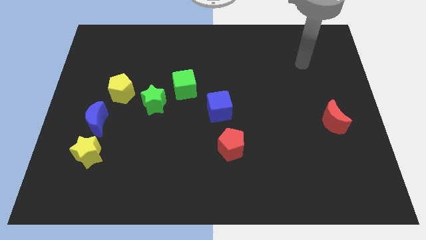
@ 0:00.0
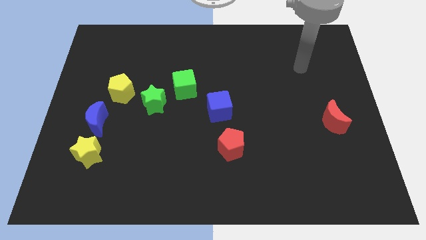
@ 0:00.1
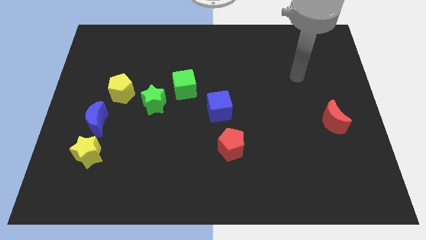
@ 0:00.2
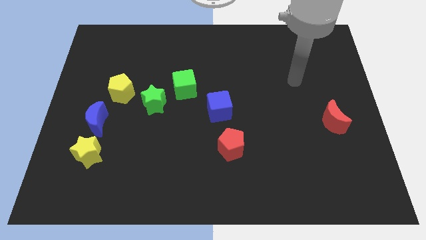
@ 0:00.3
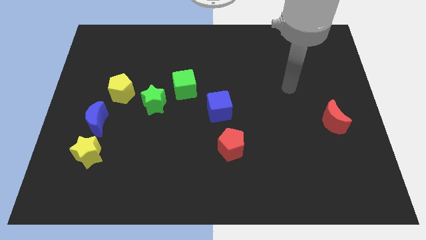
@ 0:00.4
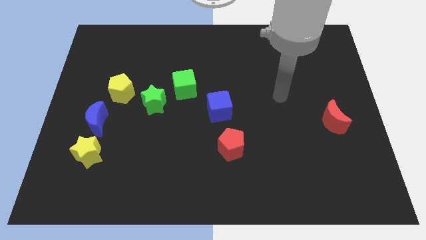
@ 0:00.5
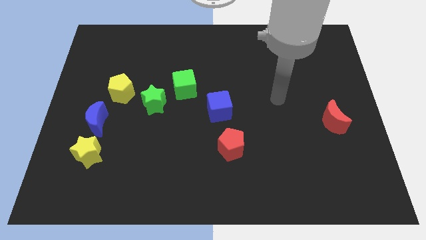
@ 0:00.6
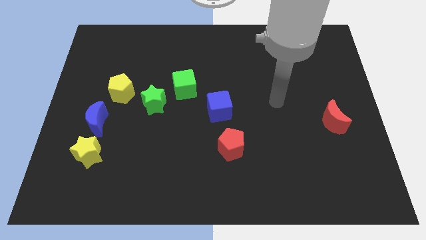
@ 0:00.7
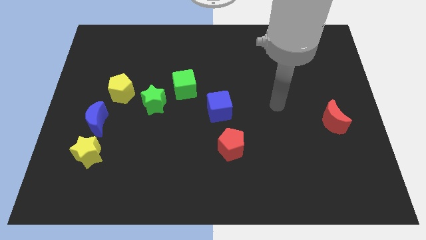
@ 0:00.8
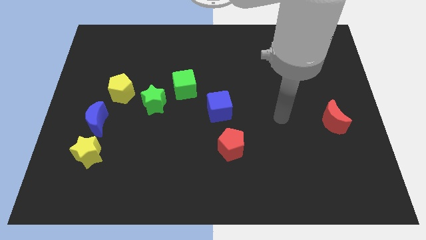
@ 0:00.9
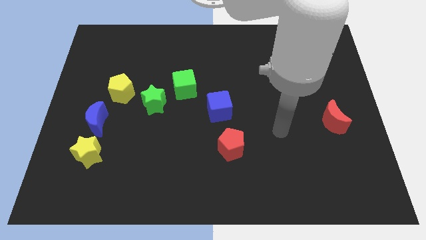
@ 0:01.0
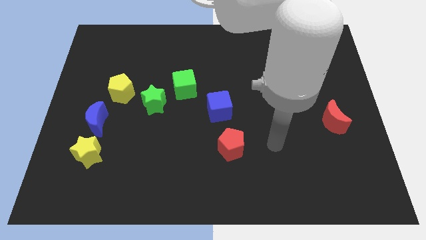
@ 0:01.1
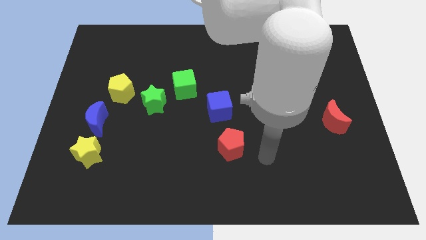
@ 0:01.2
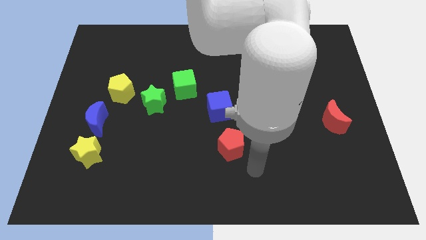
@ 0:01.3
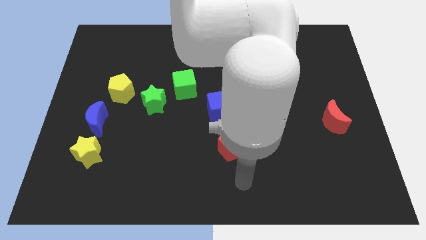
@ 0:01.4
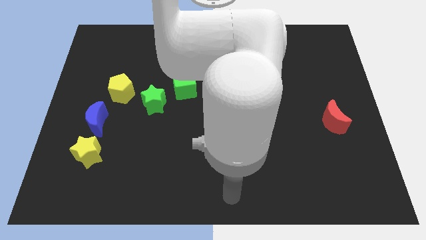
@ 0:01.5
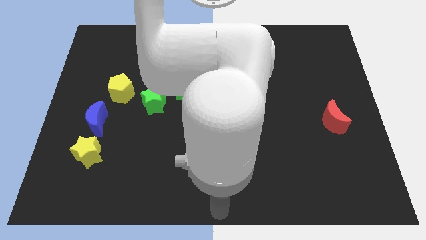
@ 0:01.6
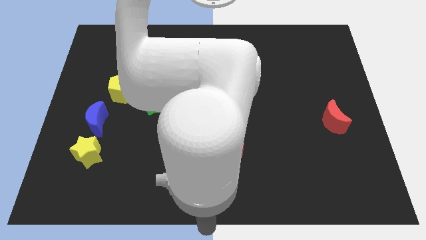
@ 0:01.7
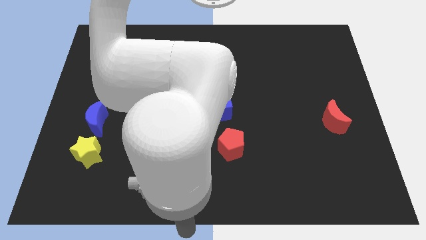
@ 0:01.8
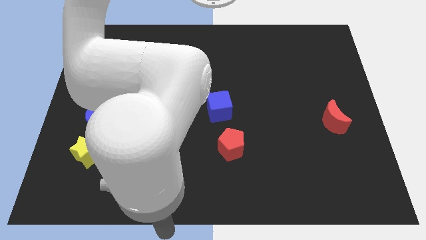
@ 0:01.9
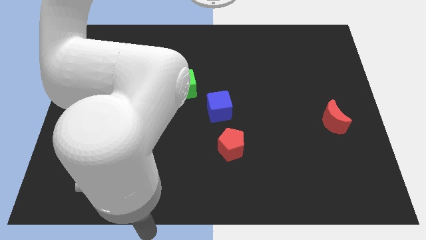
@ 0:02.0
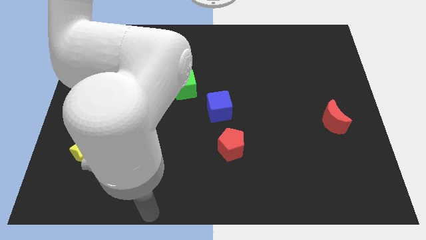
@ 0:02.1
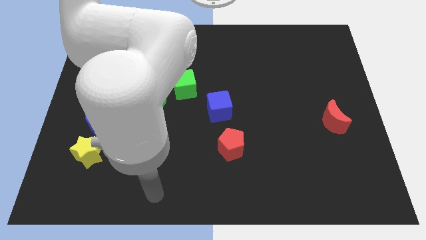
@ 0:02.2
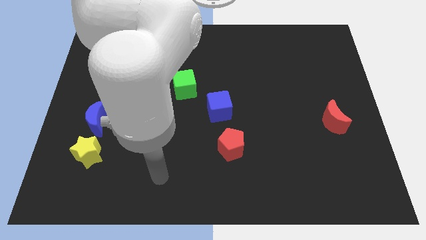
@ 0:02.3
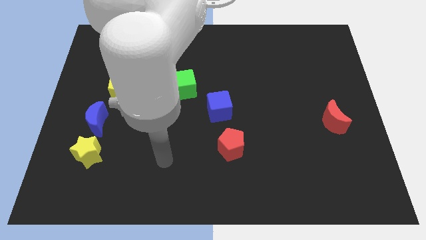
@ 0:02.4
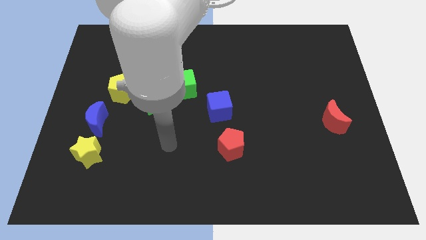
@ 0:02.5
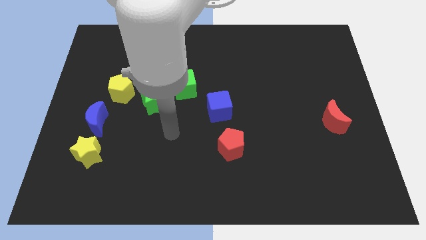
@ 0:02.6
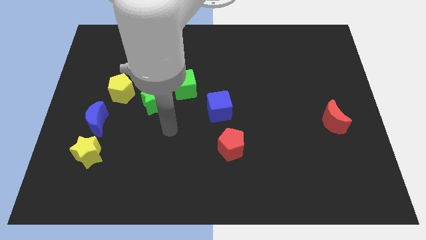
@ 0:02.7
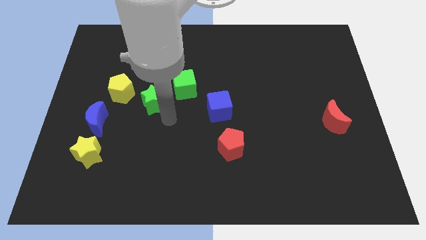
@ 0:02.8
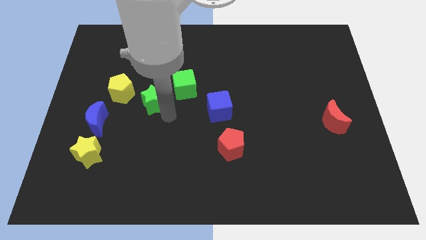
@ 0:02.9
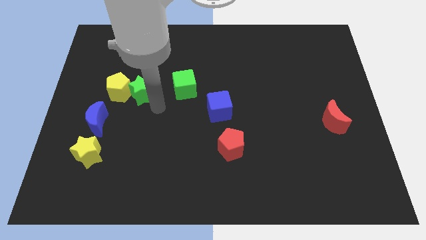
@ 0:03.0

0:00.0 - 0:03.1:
move arm towards the green star

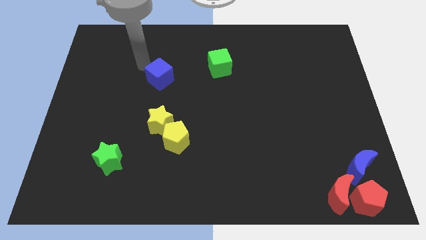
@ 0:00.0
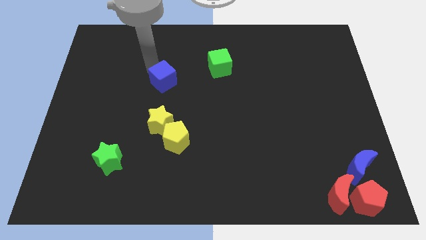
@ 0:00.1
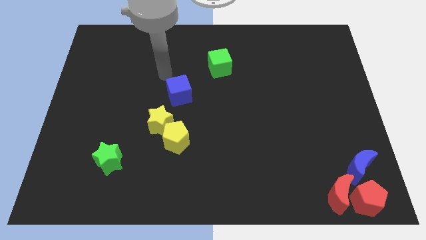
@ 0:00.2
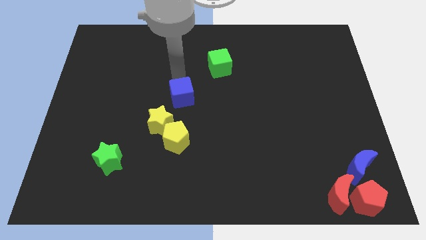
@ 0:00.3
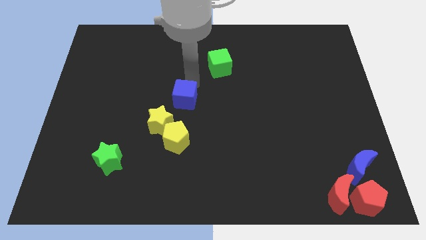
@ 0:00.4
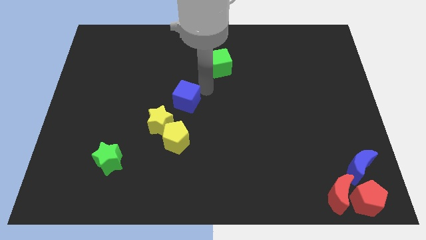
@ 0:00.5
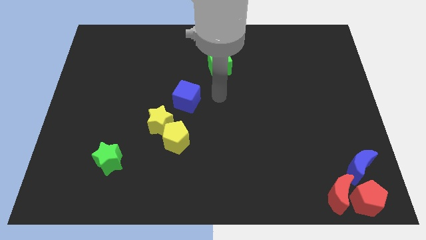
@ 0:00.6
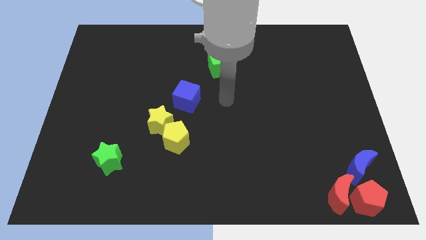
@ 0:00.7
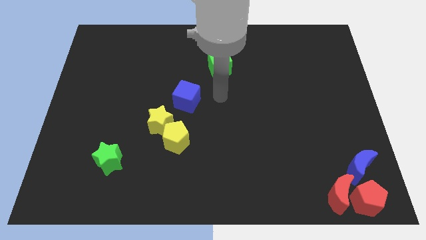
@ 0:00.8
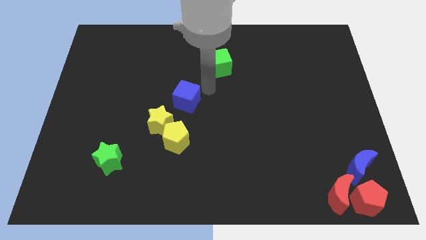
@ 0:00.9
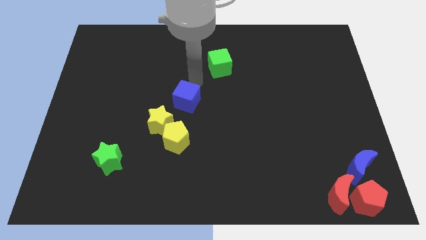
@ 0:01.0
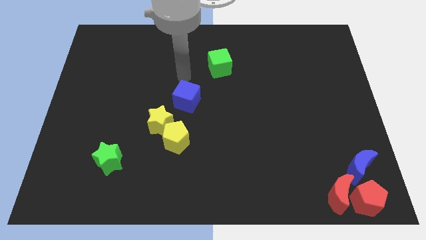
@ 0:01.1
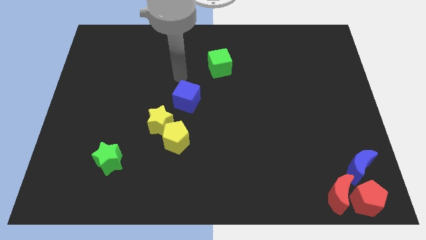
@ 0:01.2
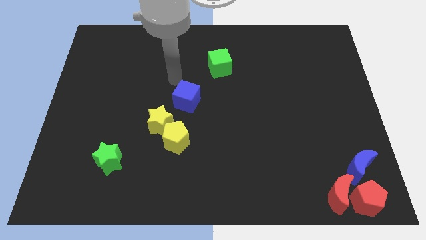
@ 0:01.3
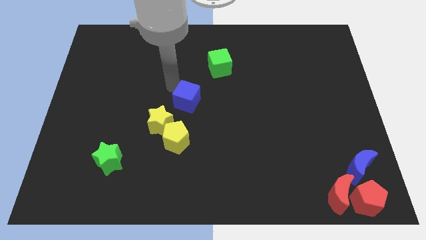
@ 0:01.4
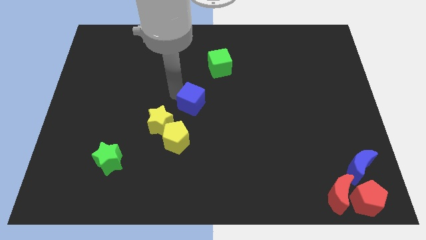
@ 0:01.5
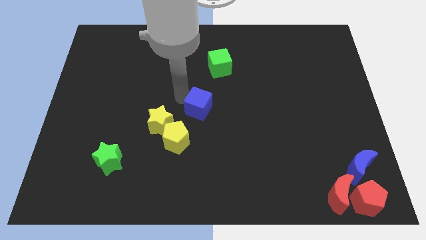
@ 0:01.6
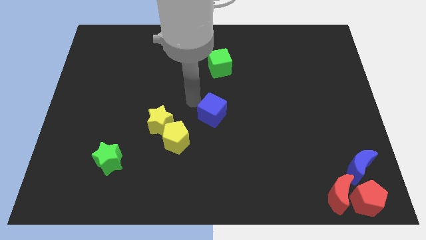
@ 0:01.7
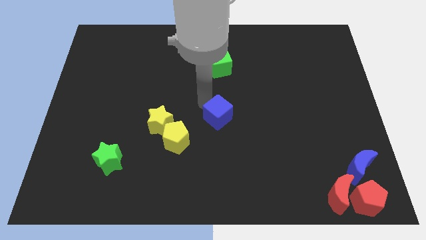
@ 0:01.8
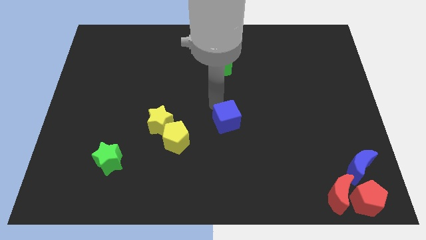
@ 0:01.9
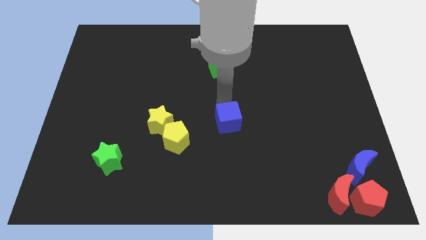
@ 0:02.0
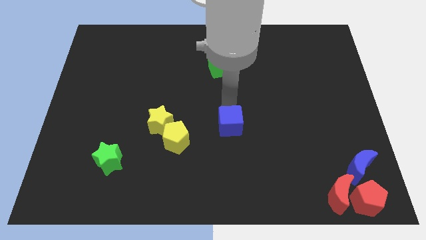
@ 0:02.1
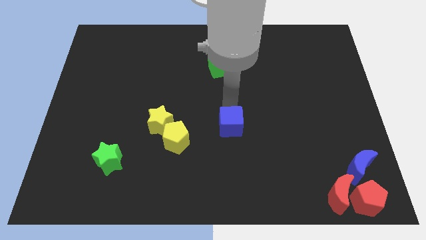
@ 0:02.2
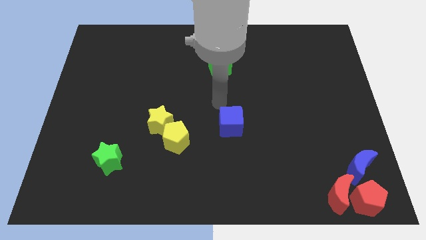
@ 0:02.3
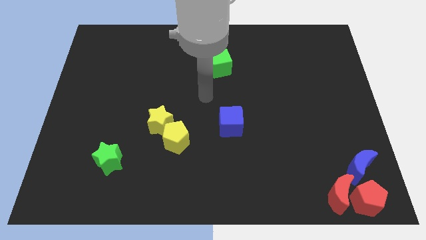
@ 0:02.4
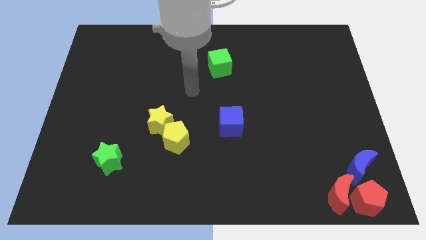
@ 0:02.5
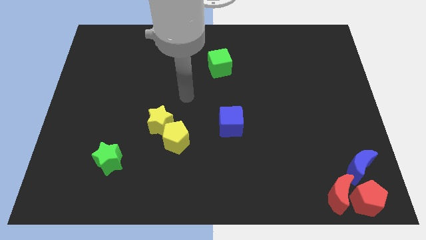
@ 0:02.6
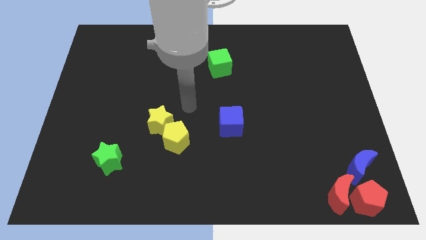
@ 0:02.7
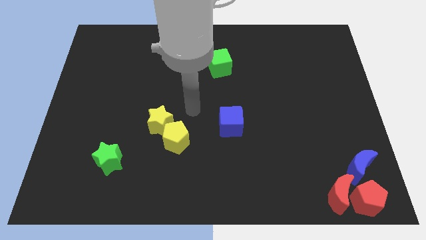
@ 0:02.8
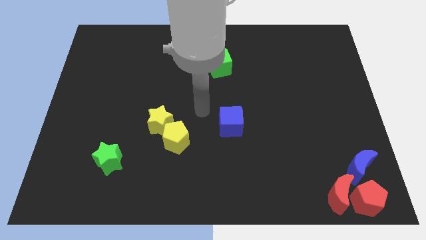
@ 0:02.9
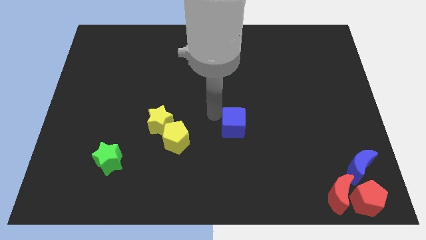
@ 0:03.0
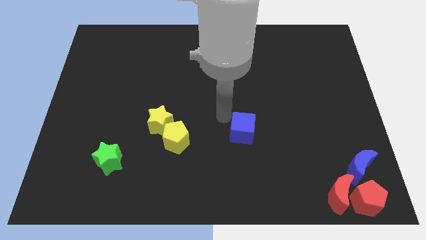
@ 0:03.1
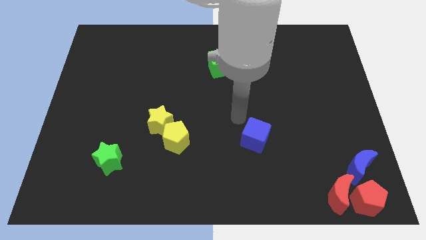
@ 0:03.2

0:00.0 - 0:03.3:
slide the blue cube horizontal to the yellow pentagon

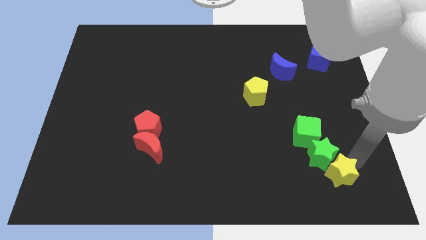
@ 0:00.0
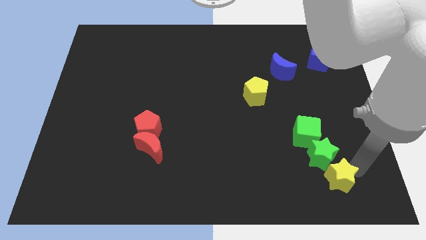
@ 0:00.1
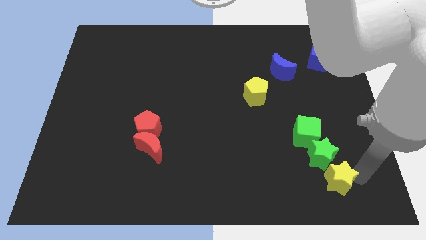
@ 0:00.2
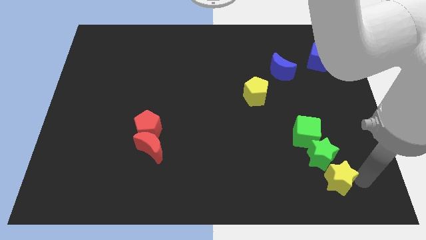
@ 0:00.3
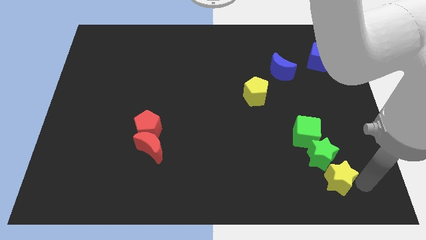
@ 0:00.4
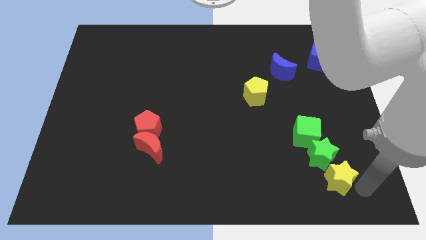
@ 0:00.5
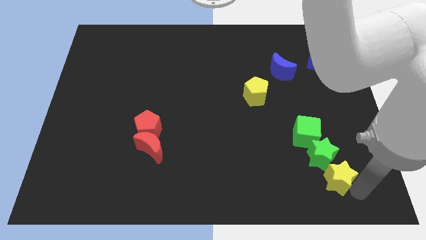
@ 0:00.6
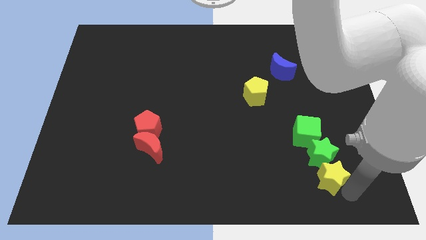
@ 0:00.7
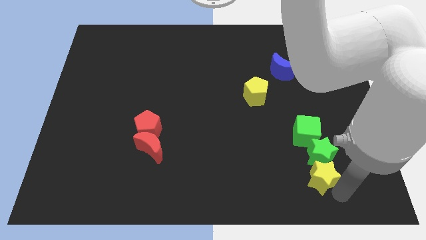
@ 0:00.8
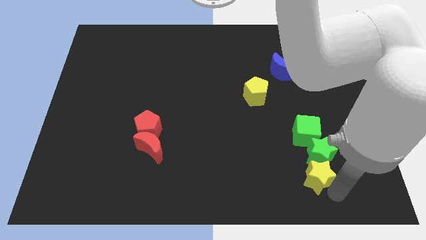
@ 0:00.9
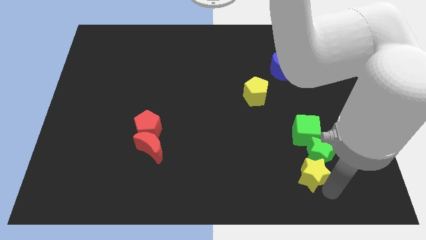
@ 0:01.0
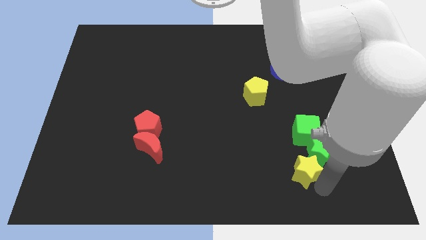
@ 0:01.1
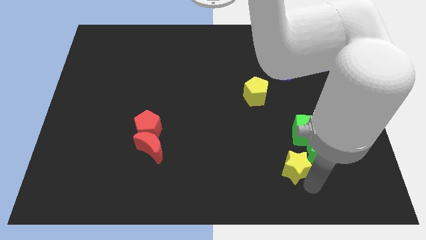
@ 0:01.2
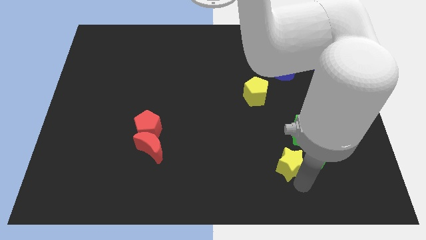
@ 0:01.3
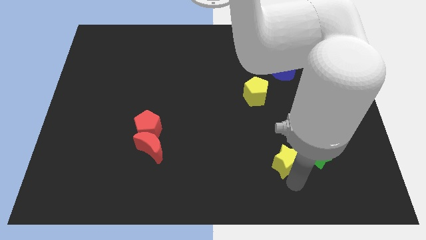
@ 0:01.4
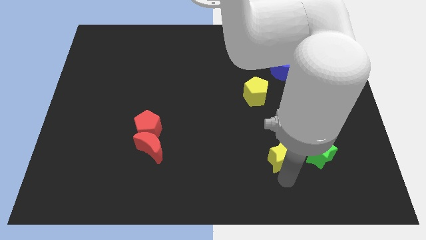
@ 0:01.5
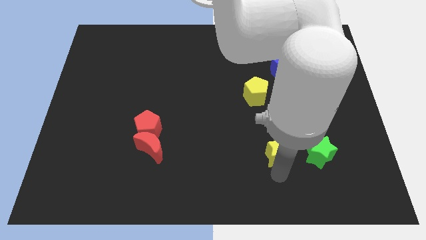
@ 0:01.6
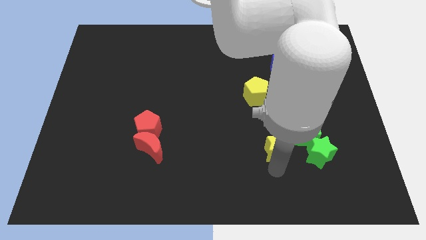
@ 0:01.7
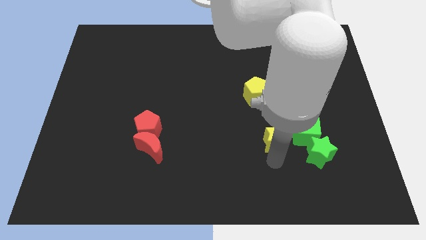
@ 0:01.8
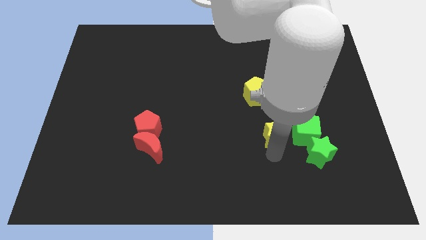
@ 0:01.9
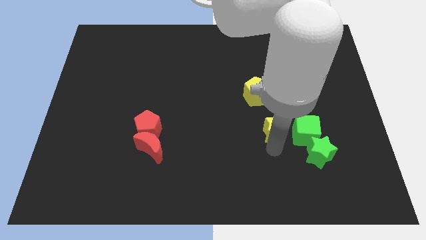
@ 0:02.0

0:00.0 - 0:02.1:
push the yellow star to the left of green cube

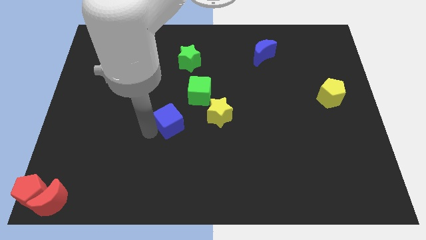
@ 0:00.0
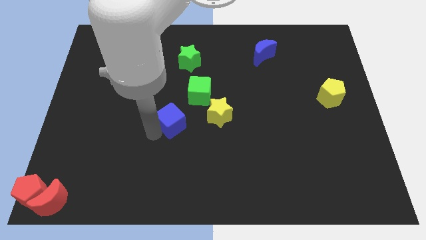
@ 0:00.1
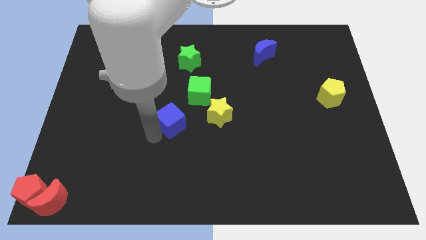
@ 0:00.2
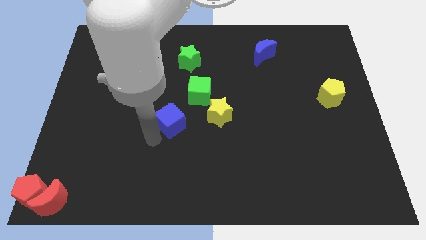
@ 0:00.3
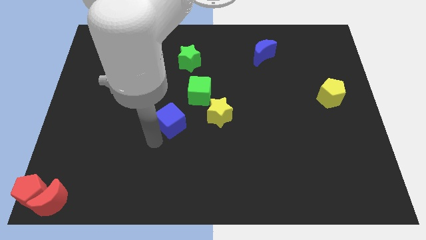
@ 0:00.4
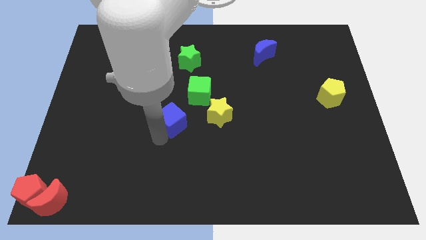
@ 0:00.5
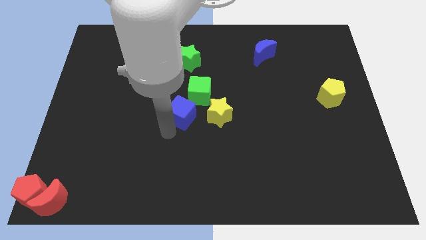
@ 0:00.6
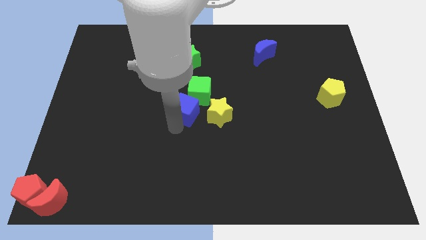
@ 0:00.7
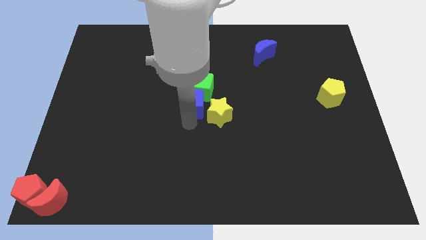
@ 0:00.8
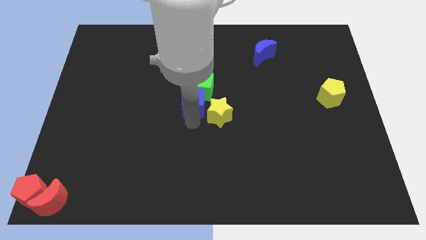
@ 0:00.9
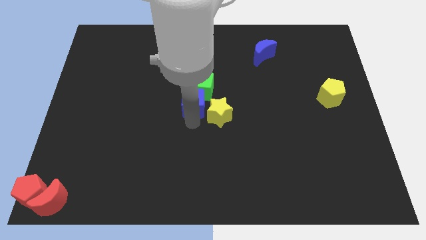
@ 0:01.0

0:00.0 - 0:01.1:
push the blue cube into green cube
